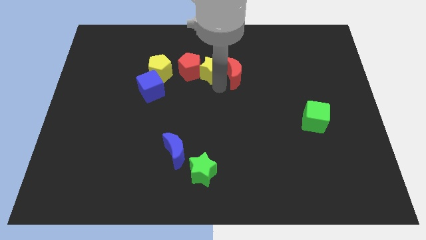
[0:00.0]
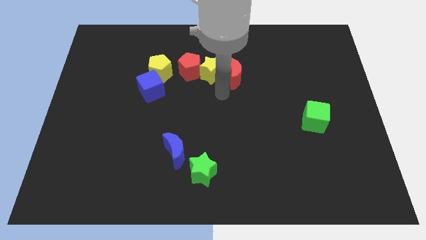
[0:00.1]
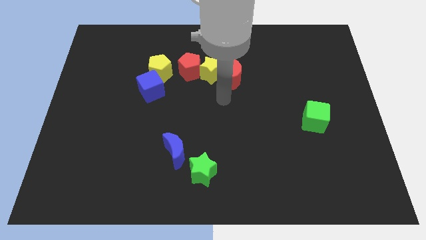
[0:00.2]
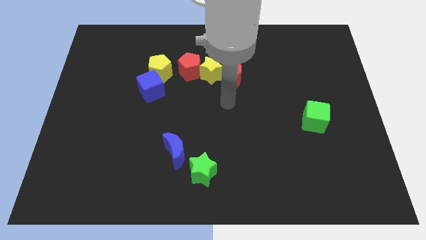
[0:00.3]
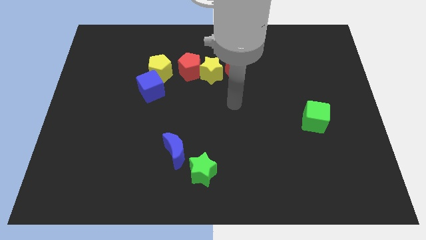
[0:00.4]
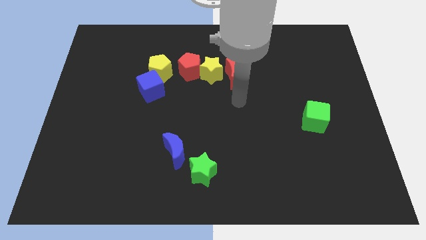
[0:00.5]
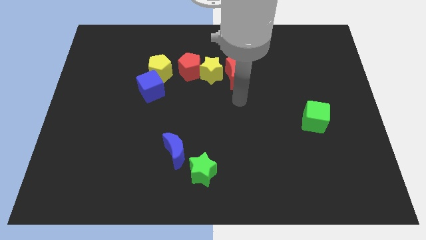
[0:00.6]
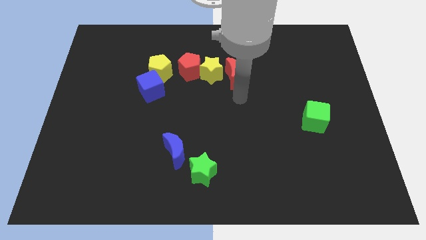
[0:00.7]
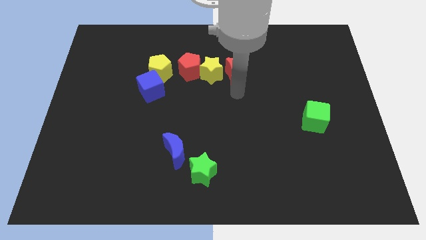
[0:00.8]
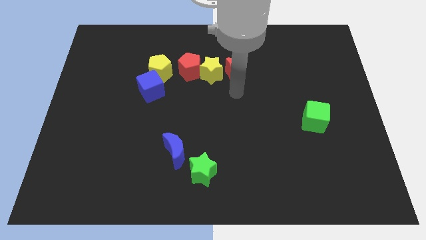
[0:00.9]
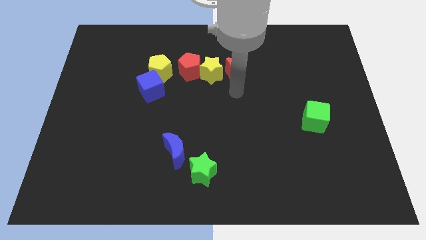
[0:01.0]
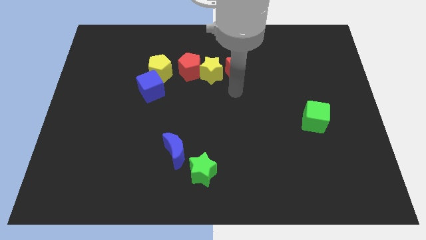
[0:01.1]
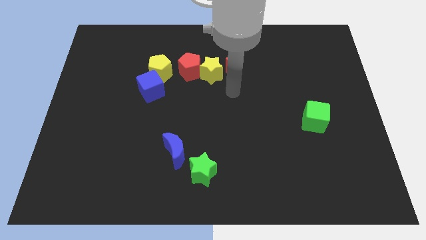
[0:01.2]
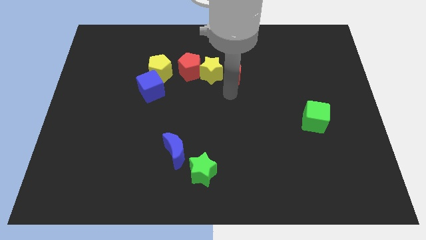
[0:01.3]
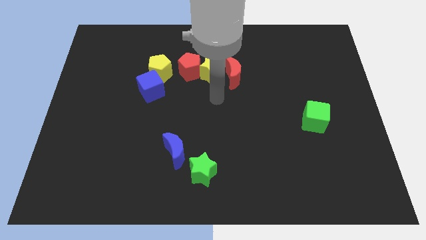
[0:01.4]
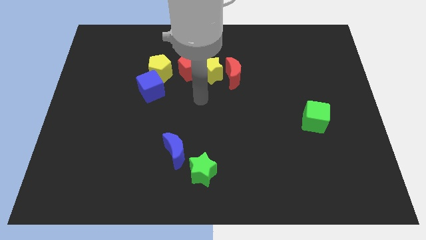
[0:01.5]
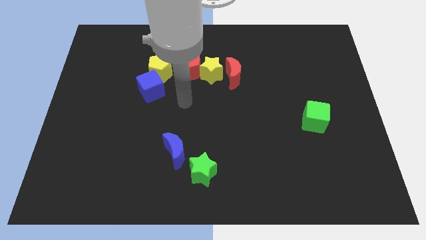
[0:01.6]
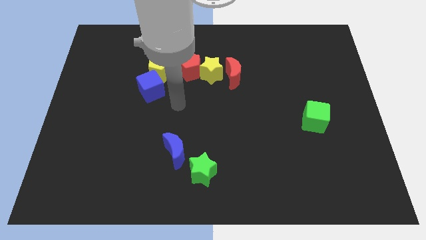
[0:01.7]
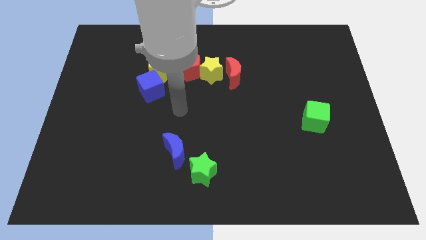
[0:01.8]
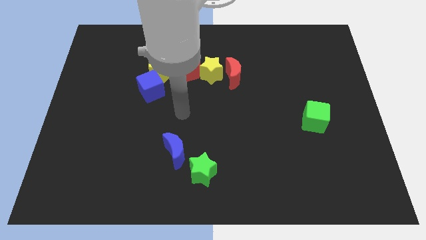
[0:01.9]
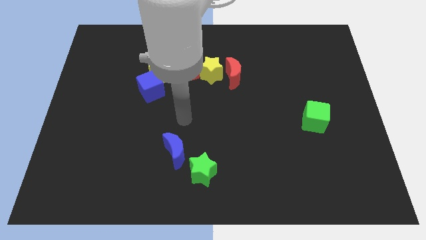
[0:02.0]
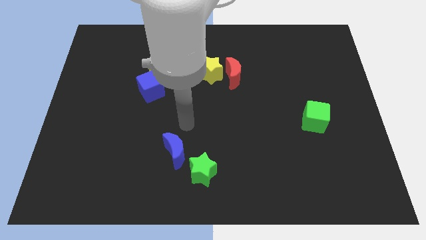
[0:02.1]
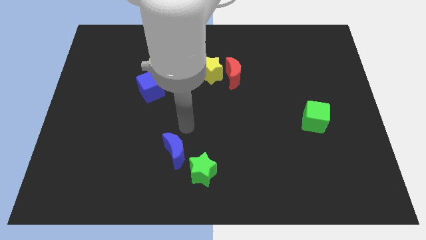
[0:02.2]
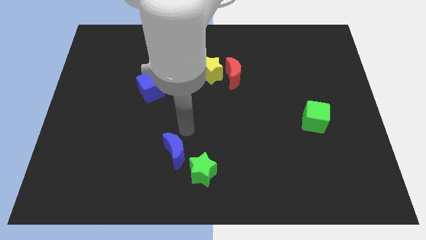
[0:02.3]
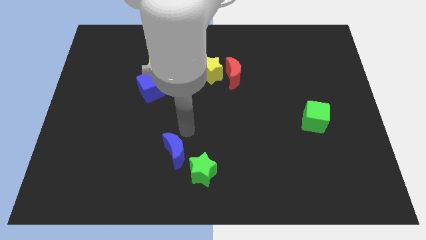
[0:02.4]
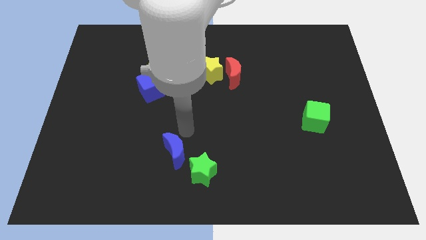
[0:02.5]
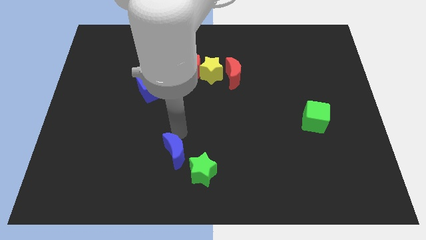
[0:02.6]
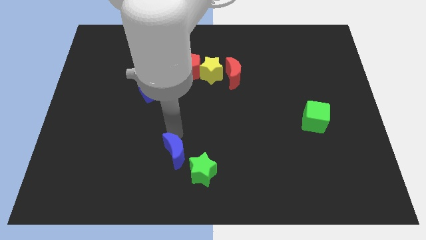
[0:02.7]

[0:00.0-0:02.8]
move your arm towards blue crescent

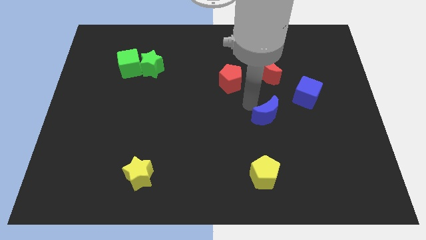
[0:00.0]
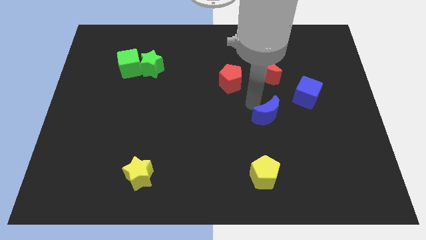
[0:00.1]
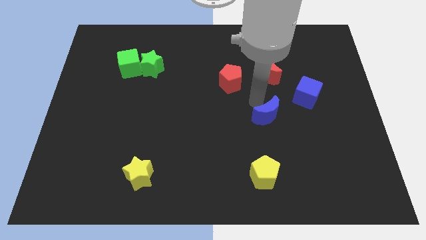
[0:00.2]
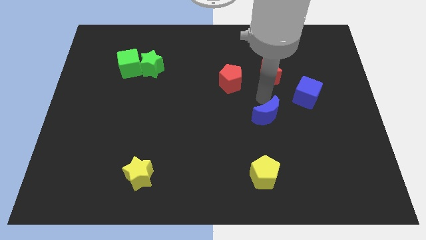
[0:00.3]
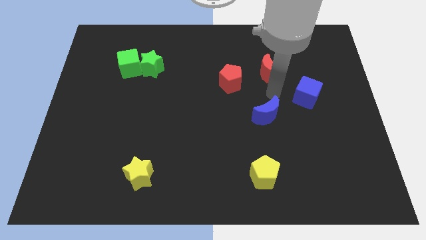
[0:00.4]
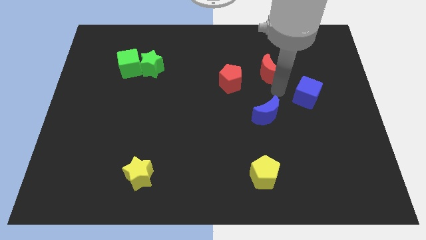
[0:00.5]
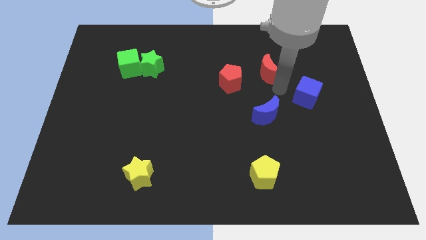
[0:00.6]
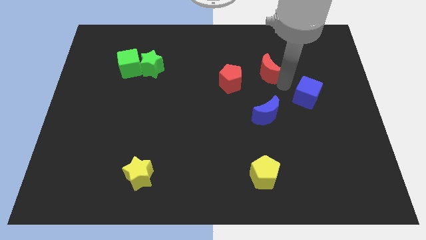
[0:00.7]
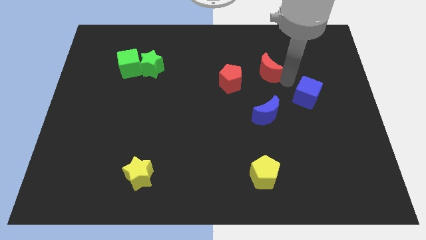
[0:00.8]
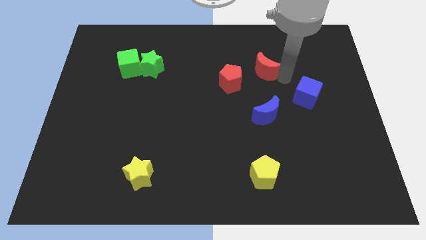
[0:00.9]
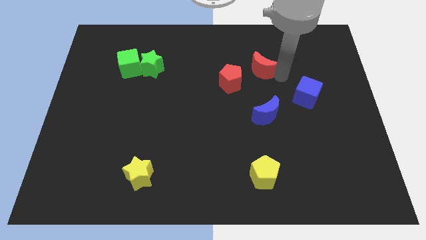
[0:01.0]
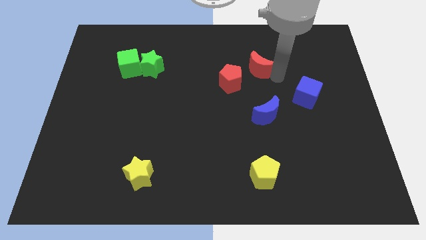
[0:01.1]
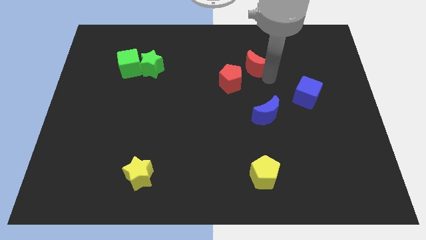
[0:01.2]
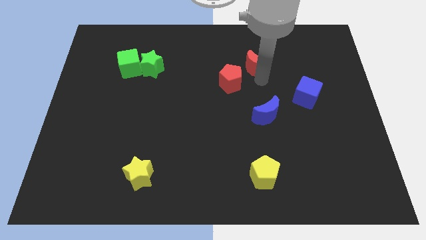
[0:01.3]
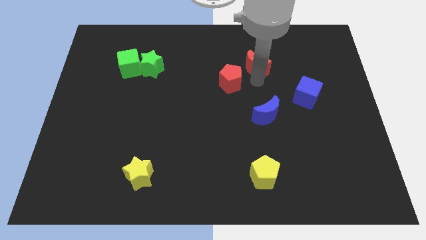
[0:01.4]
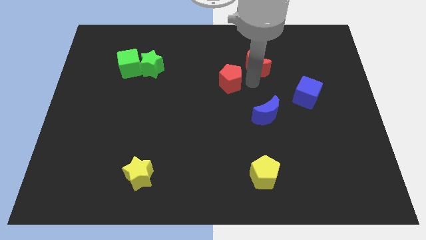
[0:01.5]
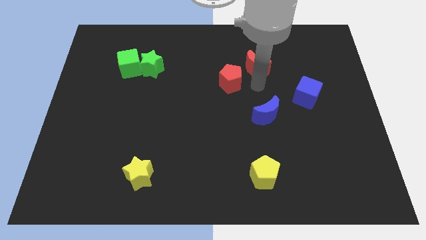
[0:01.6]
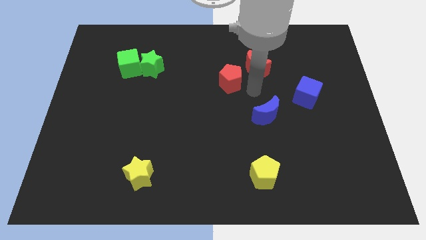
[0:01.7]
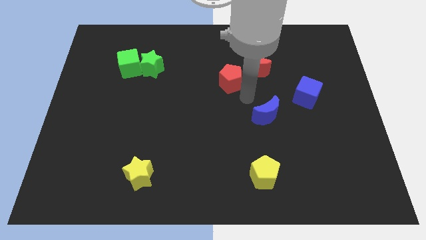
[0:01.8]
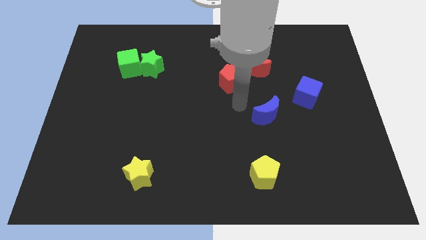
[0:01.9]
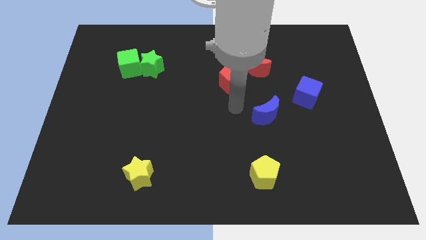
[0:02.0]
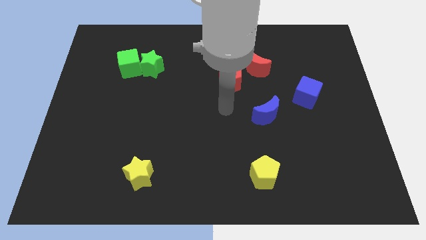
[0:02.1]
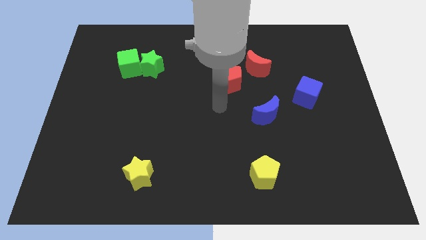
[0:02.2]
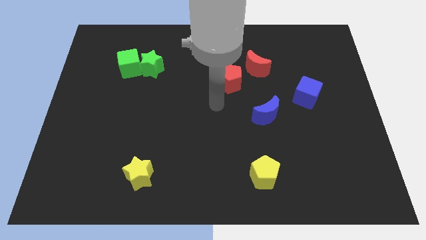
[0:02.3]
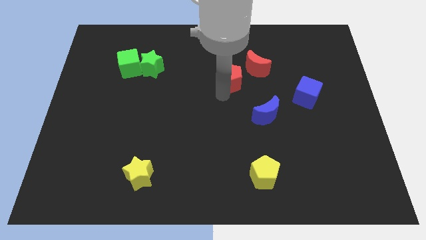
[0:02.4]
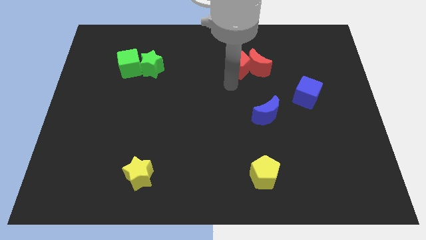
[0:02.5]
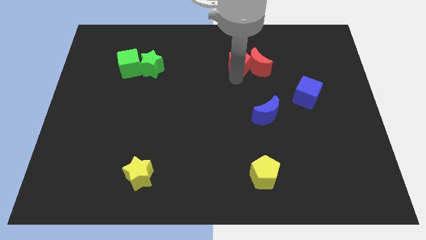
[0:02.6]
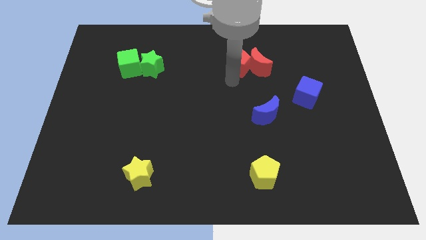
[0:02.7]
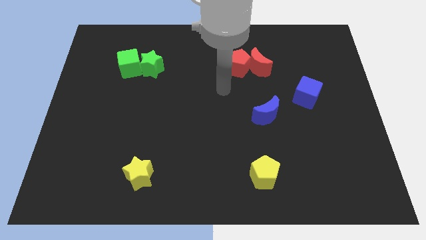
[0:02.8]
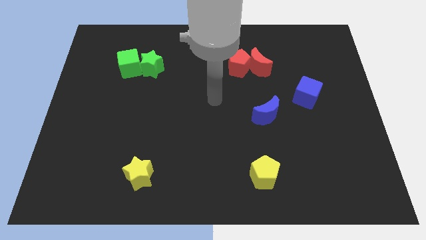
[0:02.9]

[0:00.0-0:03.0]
group up the red pentagon and red crescent at the top side of the board

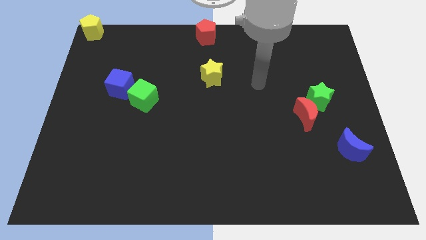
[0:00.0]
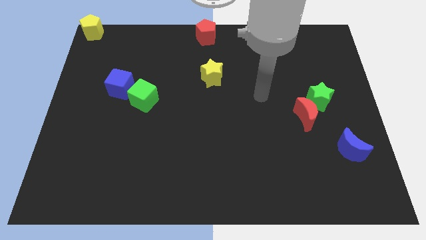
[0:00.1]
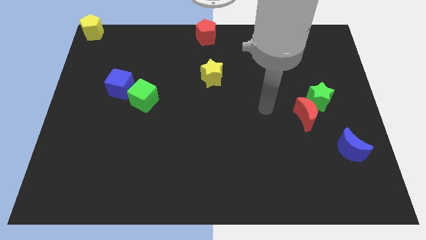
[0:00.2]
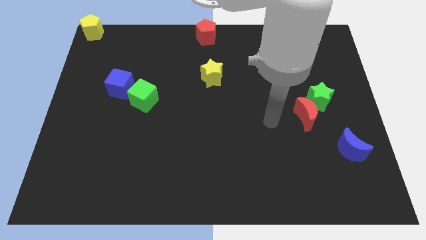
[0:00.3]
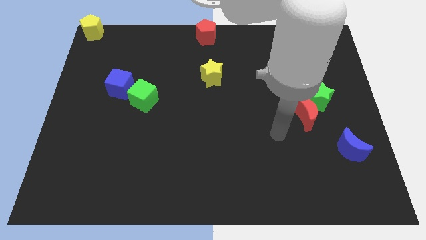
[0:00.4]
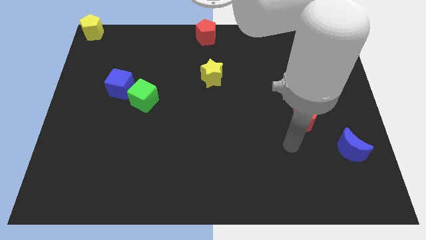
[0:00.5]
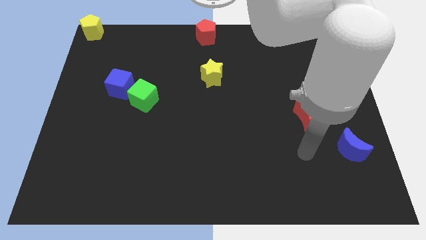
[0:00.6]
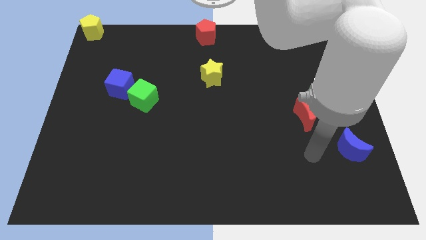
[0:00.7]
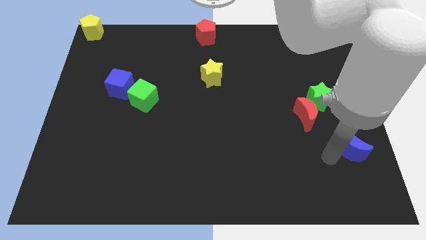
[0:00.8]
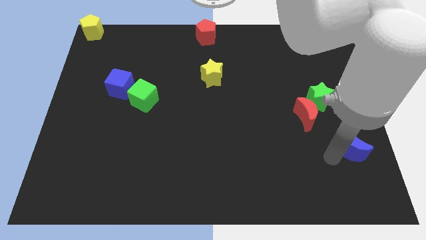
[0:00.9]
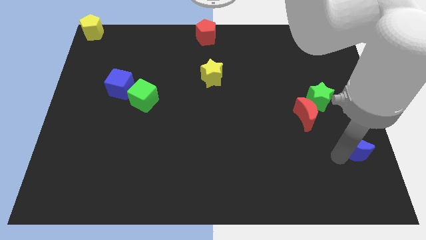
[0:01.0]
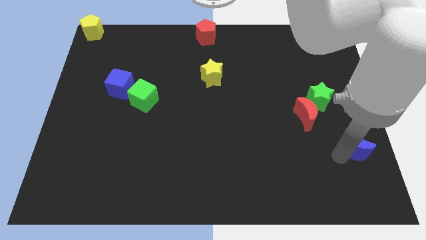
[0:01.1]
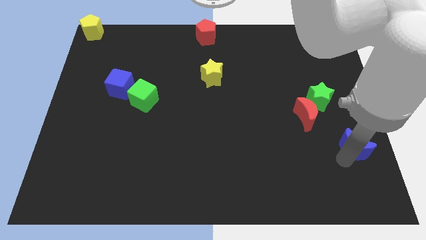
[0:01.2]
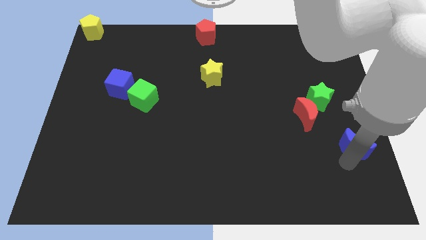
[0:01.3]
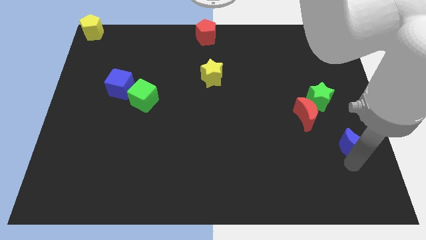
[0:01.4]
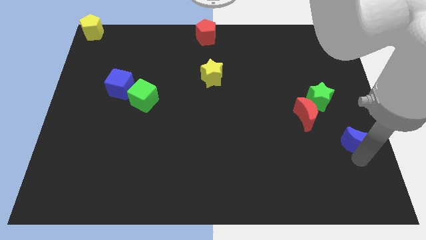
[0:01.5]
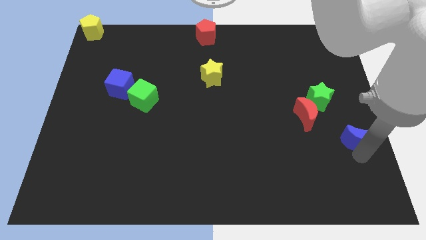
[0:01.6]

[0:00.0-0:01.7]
touch the bottom side of the blue crescent

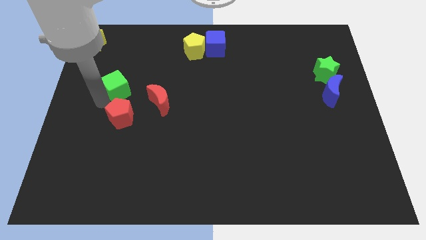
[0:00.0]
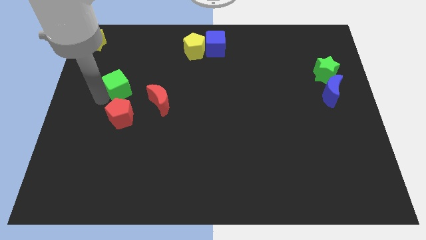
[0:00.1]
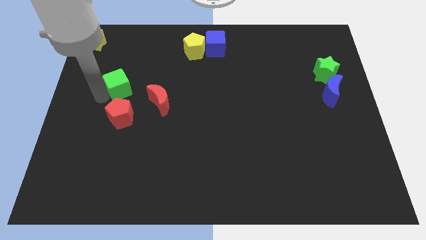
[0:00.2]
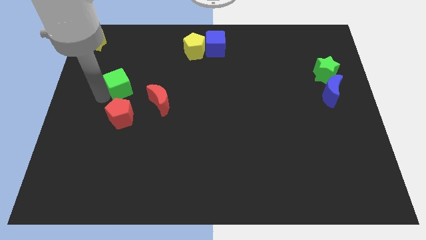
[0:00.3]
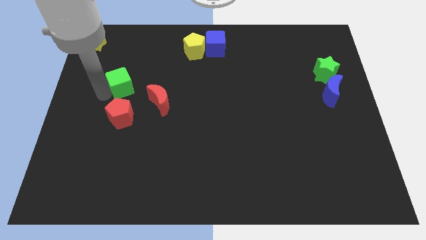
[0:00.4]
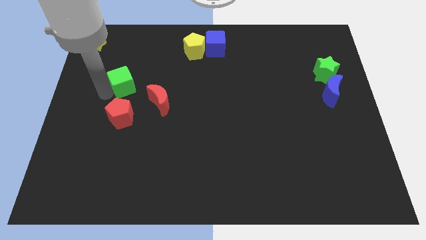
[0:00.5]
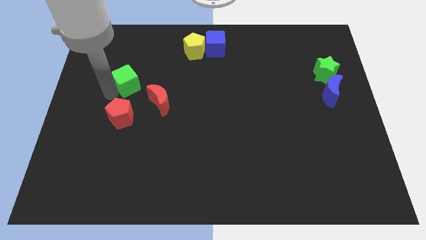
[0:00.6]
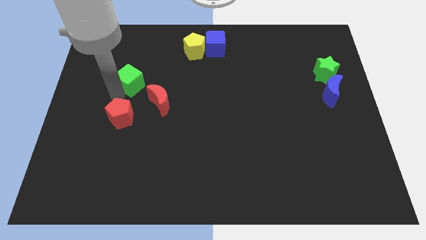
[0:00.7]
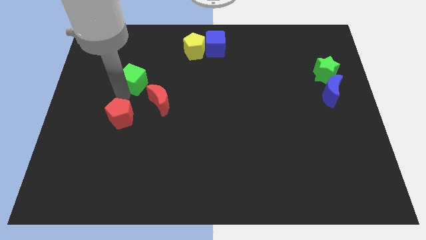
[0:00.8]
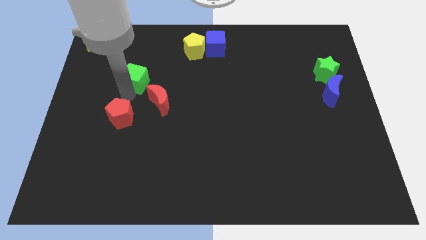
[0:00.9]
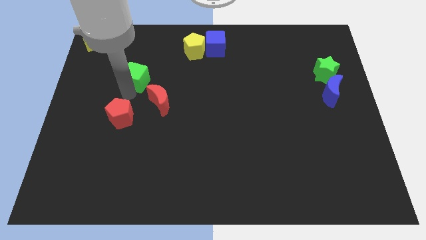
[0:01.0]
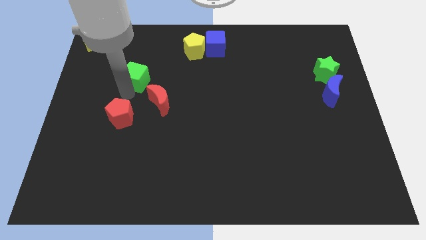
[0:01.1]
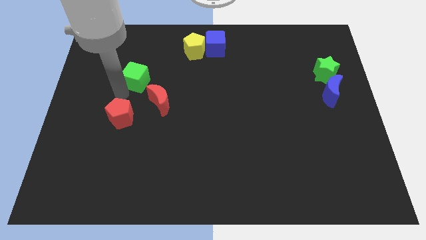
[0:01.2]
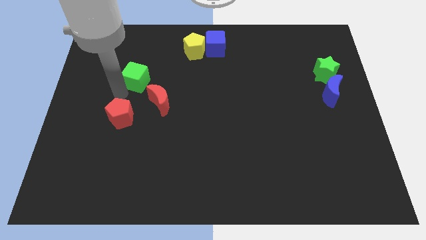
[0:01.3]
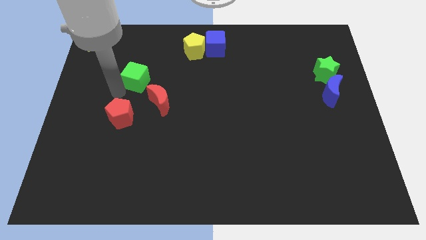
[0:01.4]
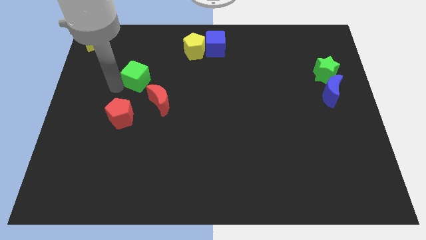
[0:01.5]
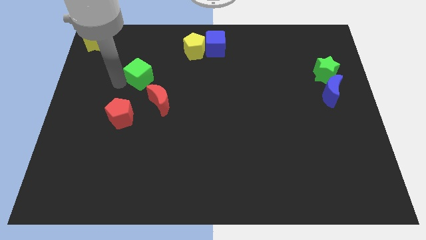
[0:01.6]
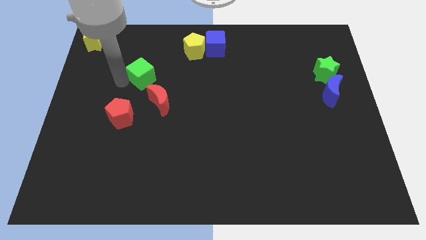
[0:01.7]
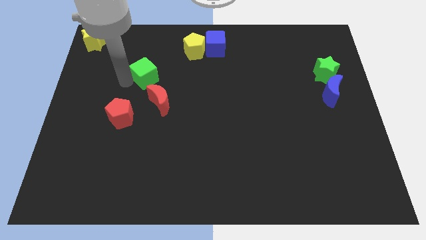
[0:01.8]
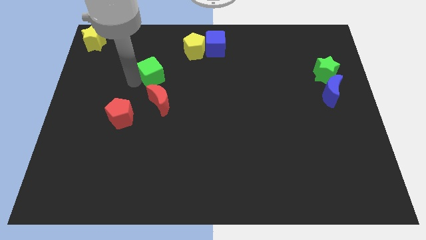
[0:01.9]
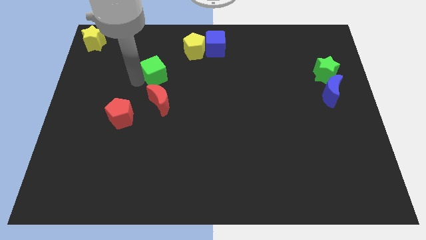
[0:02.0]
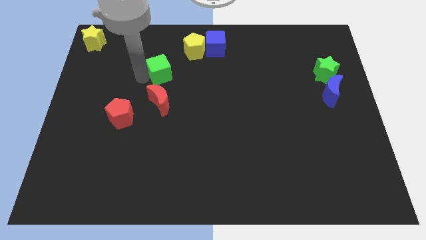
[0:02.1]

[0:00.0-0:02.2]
slide the green cube above the red crescent
